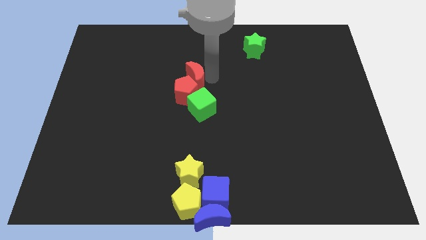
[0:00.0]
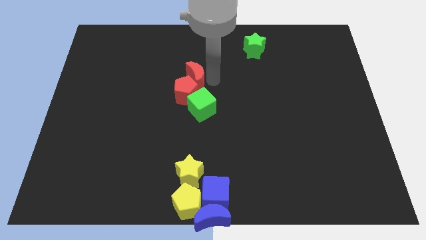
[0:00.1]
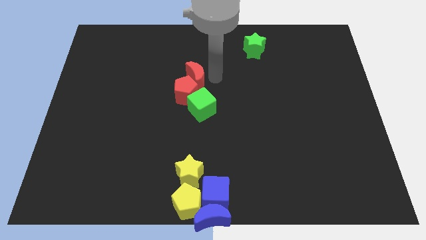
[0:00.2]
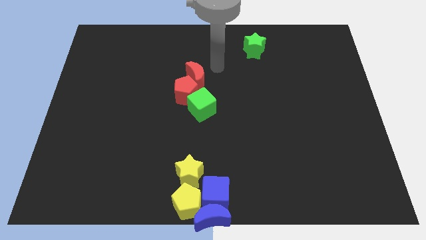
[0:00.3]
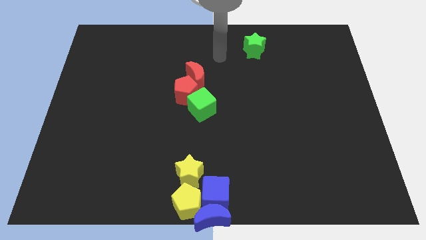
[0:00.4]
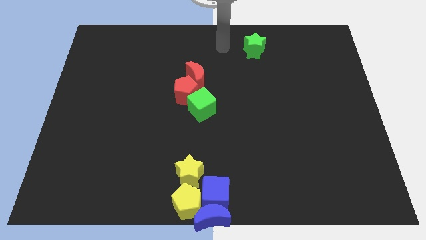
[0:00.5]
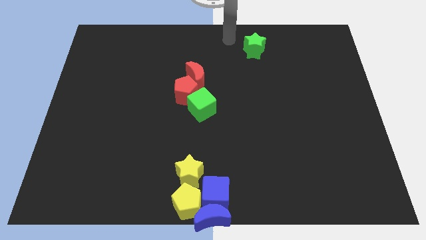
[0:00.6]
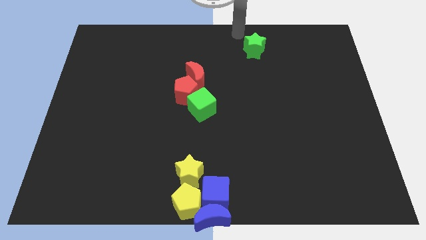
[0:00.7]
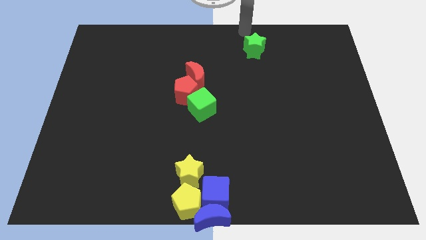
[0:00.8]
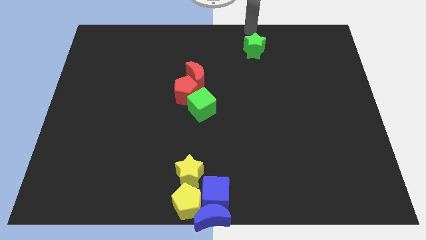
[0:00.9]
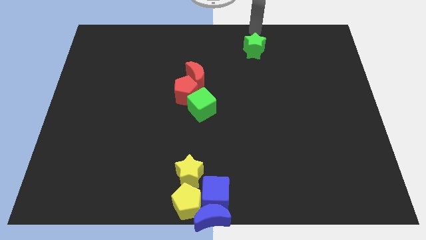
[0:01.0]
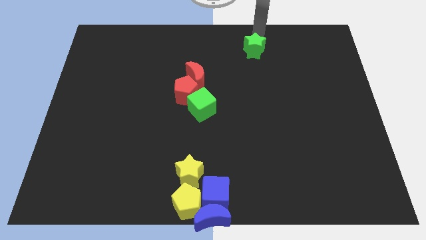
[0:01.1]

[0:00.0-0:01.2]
place your arm at the top of the green star

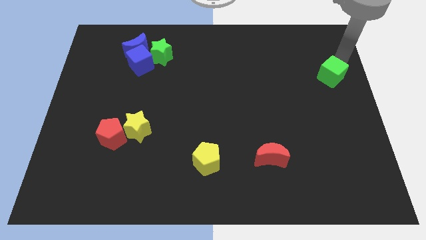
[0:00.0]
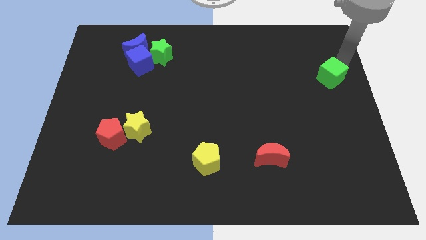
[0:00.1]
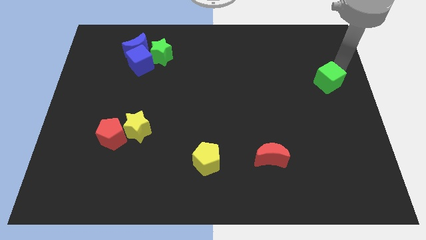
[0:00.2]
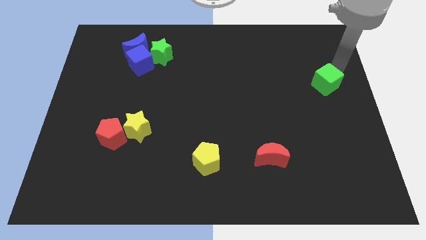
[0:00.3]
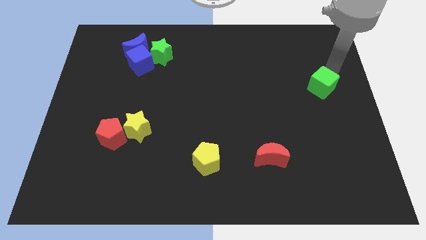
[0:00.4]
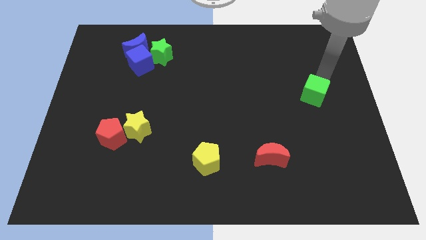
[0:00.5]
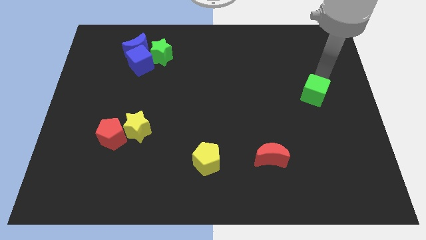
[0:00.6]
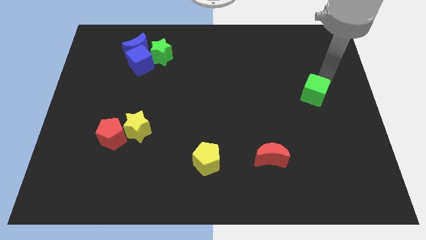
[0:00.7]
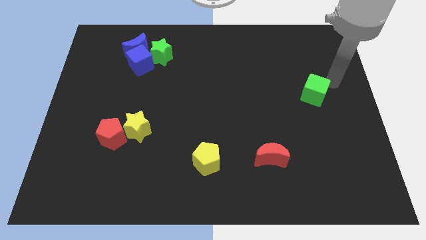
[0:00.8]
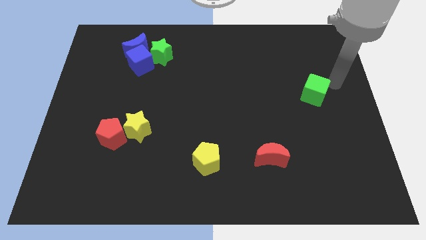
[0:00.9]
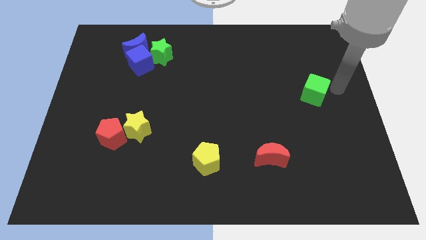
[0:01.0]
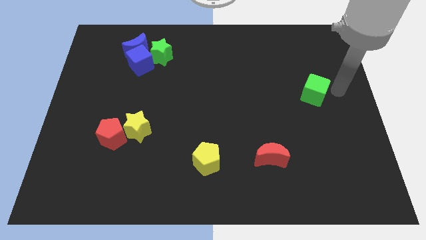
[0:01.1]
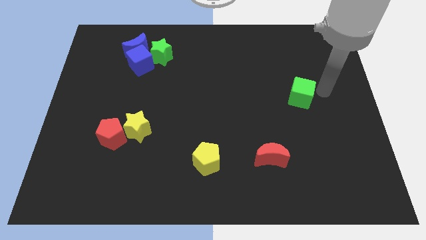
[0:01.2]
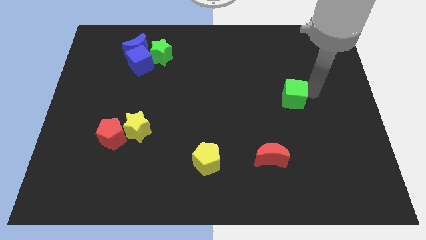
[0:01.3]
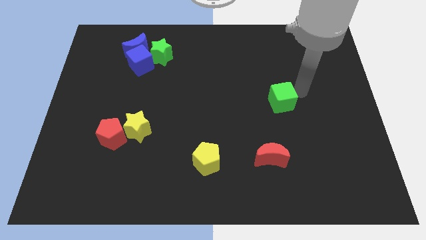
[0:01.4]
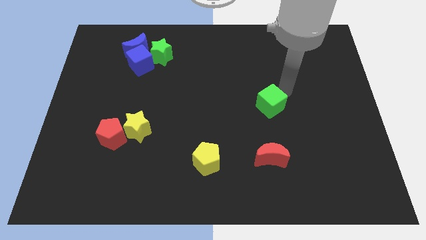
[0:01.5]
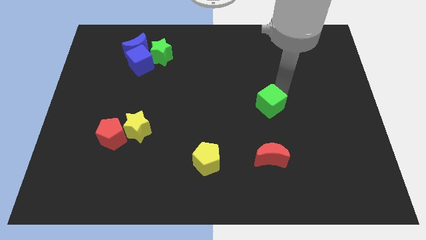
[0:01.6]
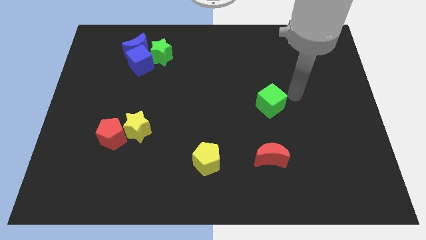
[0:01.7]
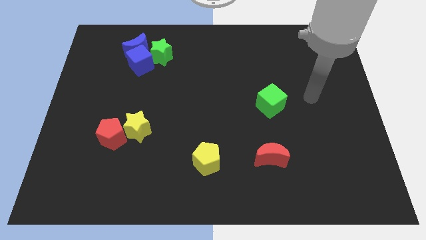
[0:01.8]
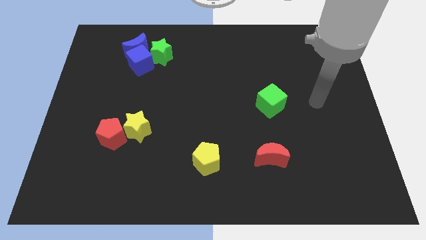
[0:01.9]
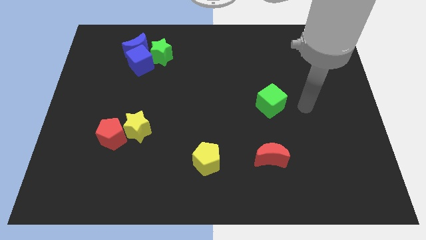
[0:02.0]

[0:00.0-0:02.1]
move the green cube above the red moon

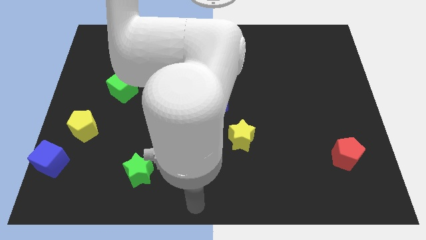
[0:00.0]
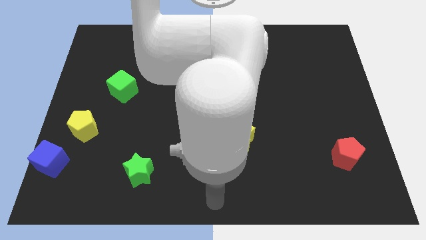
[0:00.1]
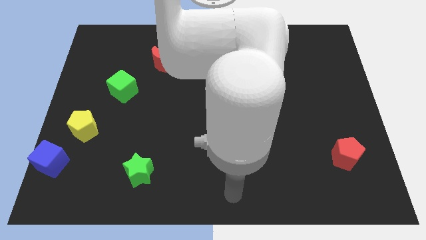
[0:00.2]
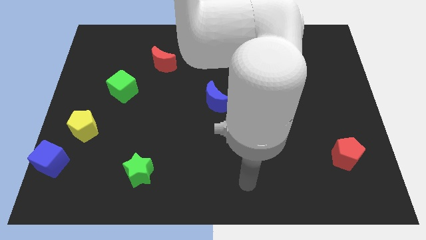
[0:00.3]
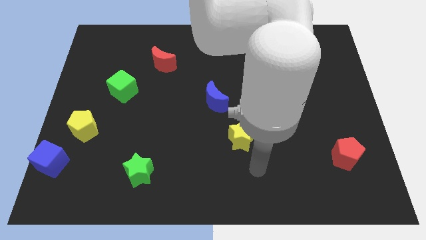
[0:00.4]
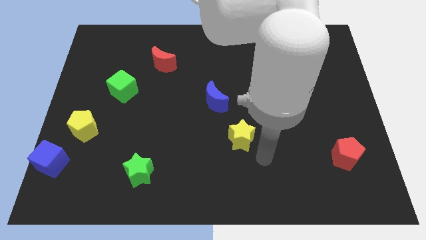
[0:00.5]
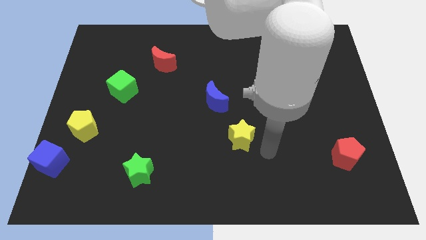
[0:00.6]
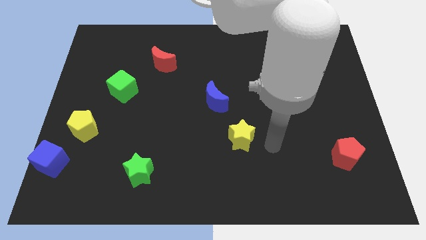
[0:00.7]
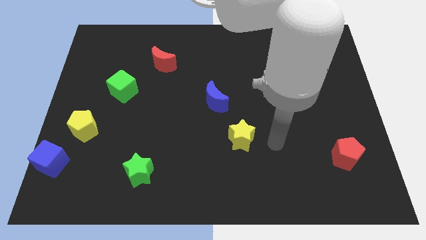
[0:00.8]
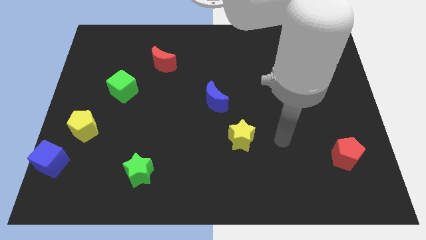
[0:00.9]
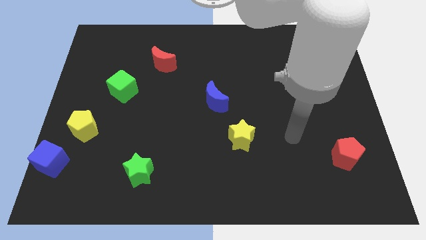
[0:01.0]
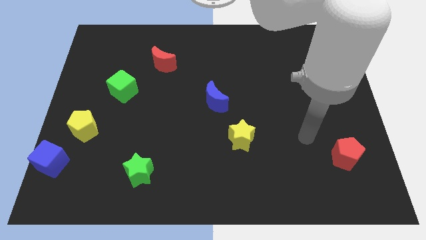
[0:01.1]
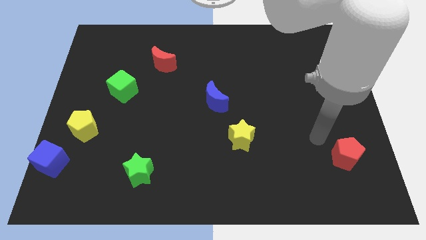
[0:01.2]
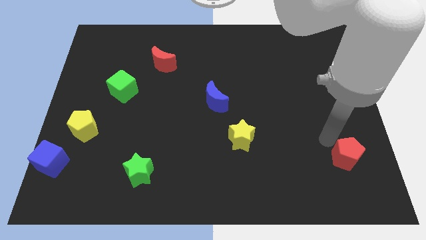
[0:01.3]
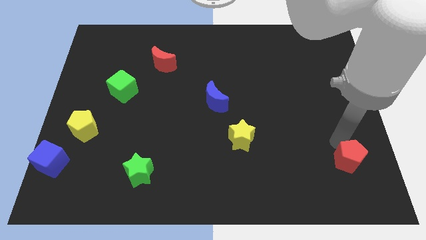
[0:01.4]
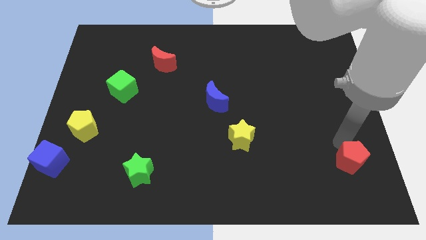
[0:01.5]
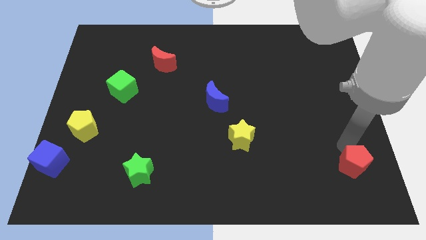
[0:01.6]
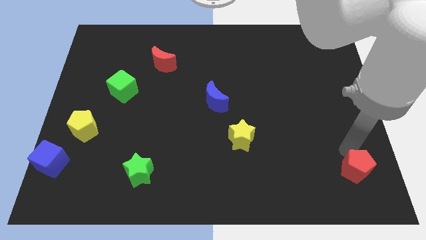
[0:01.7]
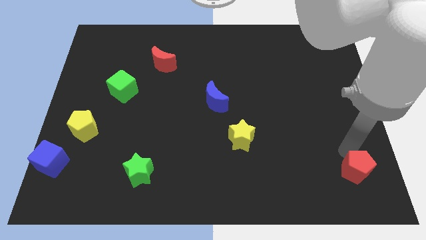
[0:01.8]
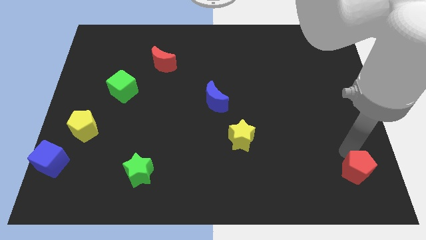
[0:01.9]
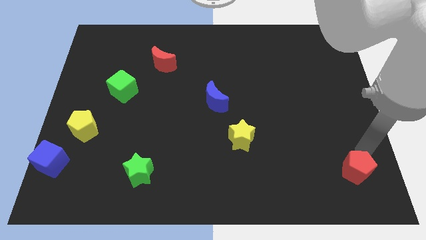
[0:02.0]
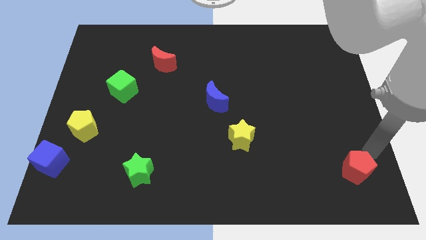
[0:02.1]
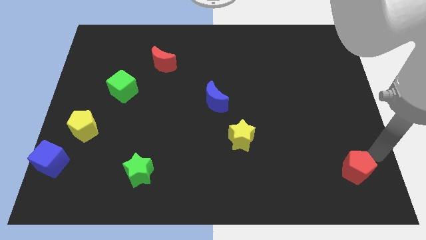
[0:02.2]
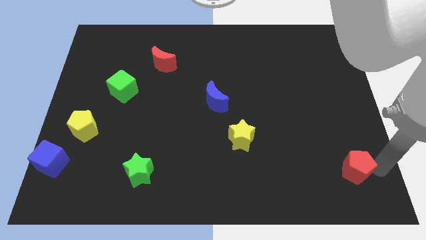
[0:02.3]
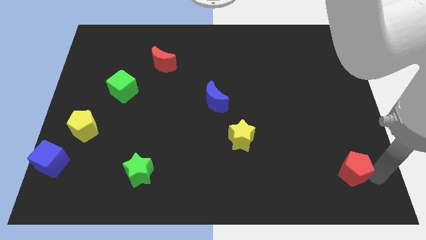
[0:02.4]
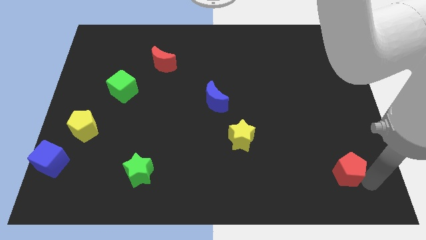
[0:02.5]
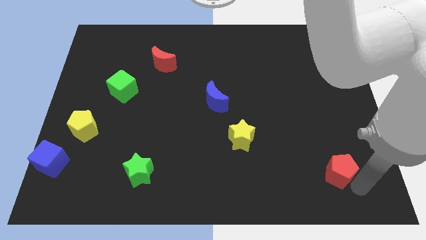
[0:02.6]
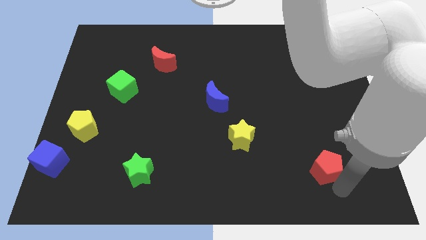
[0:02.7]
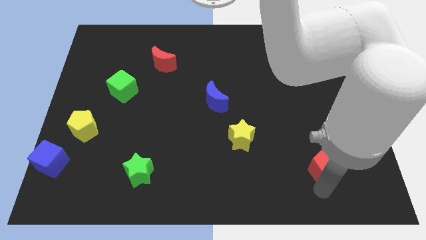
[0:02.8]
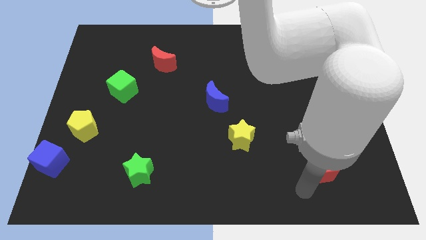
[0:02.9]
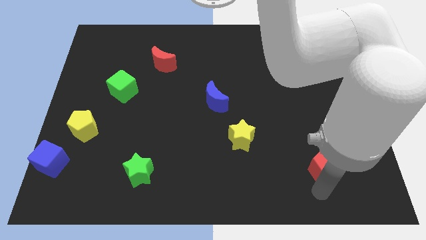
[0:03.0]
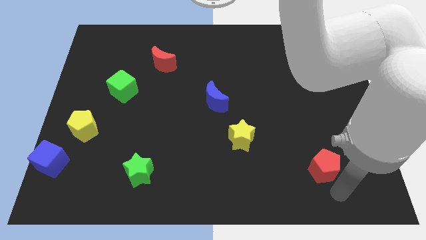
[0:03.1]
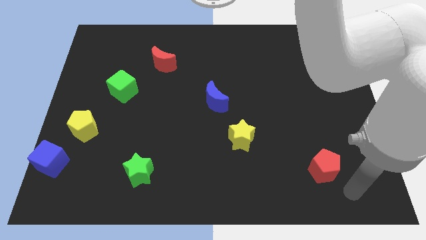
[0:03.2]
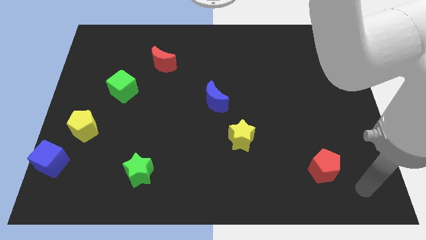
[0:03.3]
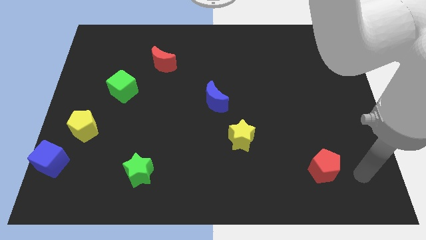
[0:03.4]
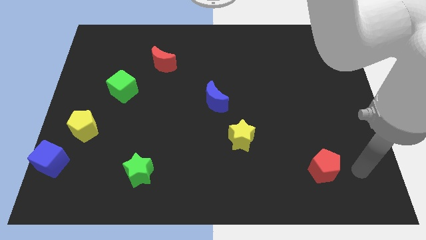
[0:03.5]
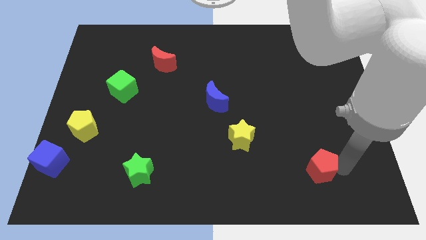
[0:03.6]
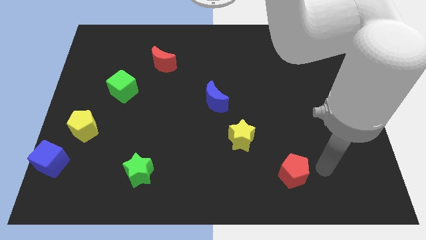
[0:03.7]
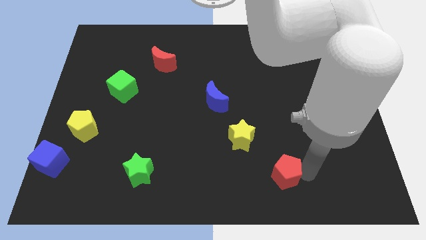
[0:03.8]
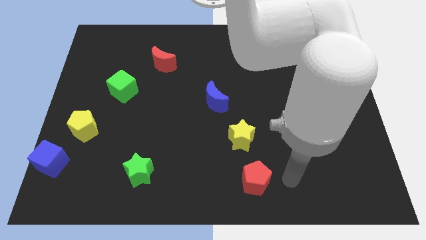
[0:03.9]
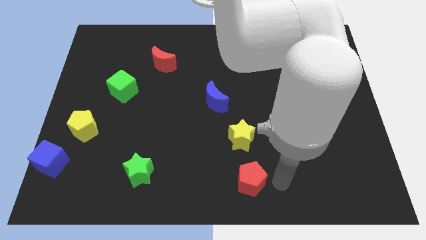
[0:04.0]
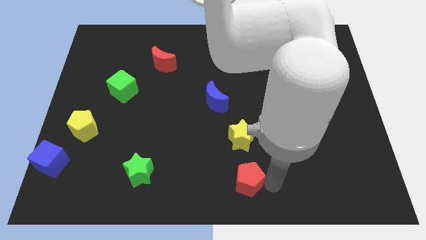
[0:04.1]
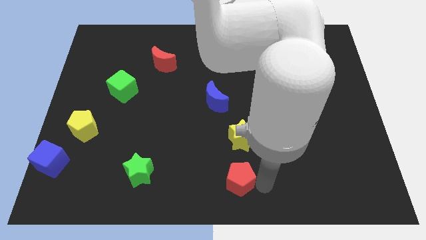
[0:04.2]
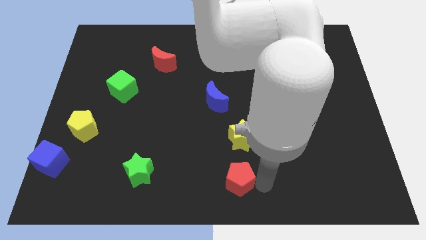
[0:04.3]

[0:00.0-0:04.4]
move the red pentagon to the left of the board

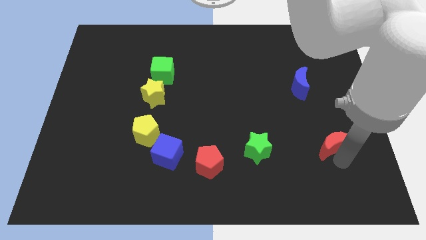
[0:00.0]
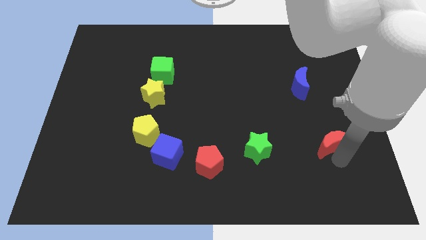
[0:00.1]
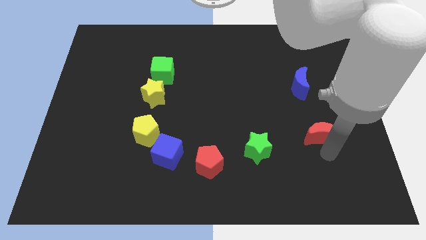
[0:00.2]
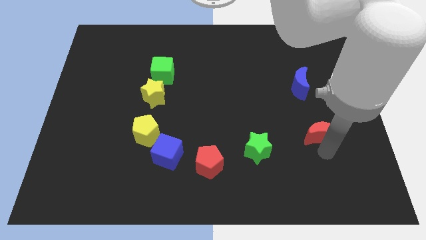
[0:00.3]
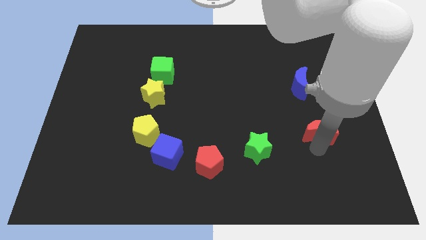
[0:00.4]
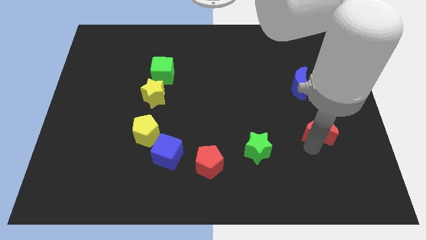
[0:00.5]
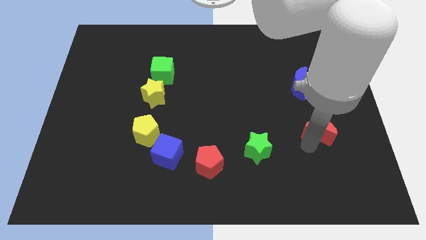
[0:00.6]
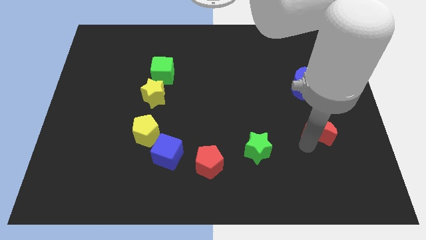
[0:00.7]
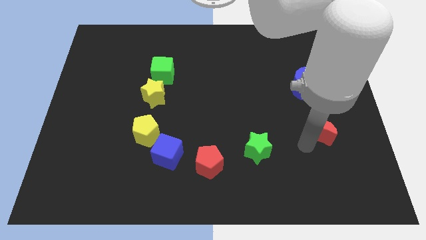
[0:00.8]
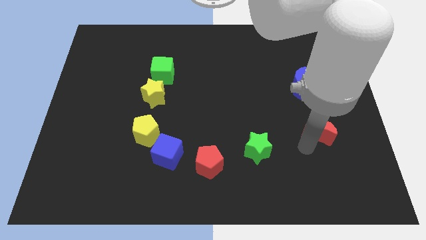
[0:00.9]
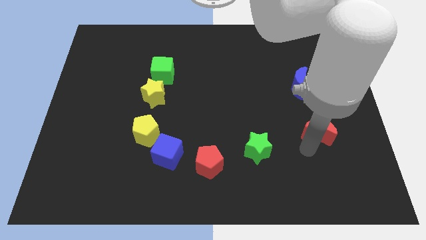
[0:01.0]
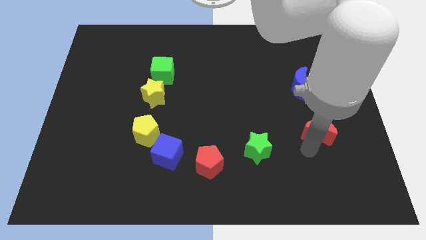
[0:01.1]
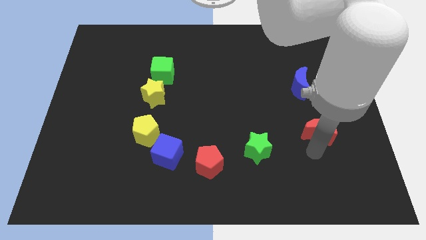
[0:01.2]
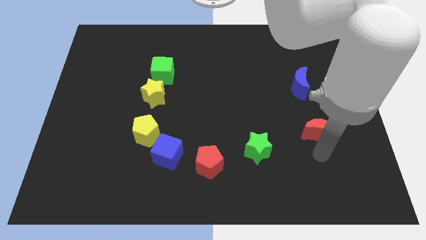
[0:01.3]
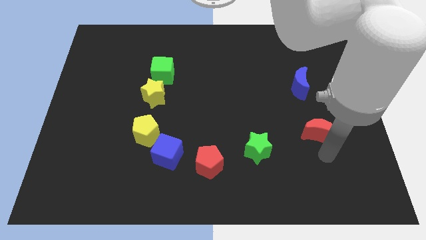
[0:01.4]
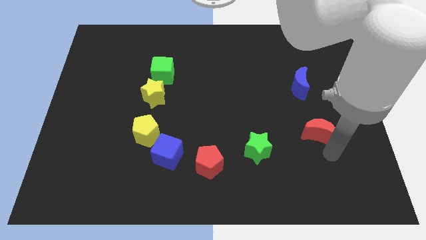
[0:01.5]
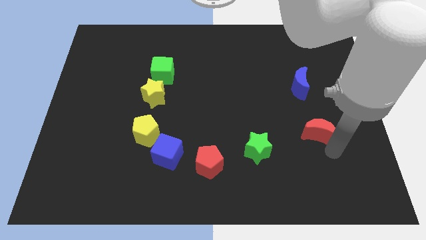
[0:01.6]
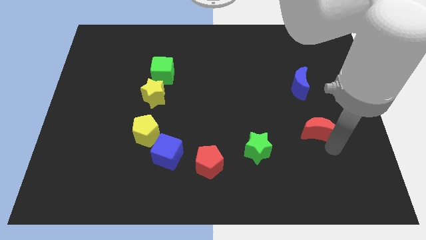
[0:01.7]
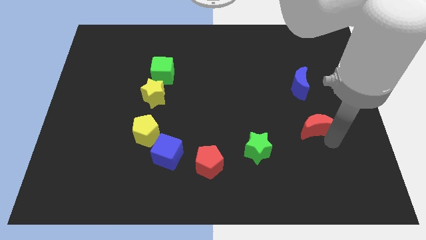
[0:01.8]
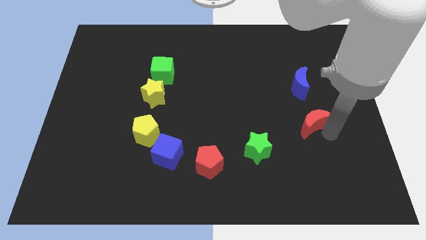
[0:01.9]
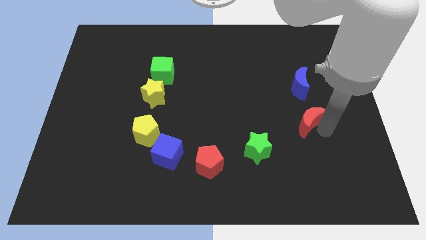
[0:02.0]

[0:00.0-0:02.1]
place the red crescent below the blue crescent
